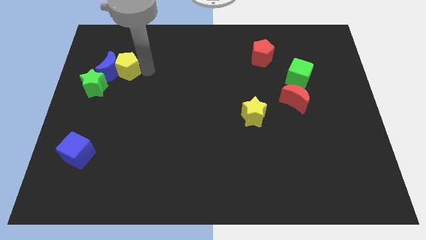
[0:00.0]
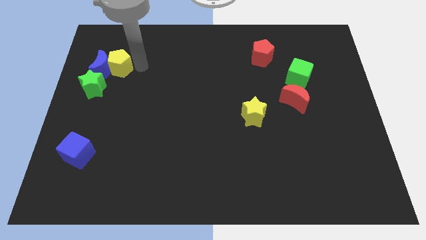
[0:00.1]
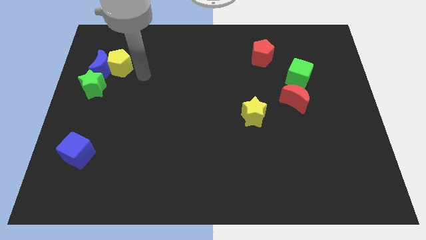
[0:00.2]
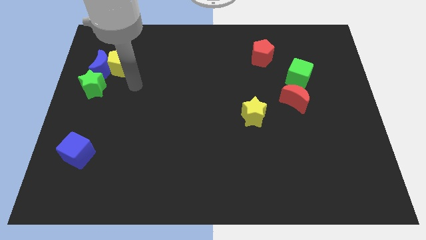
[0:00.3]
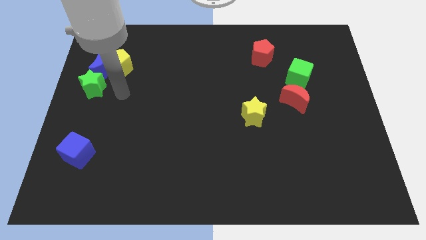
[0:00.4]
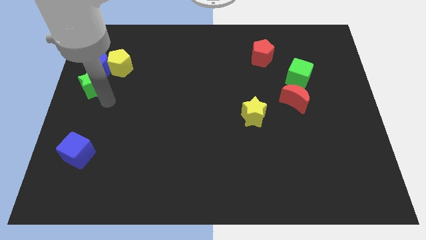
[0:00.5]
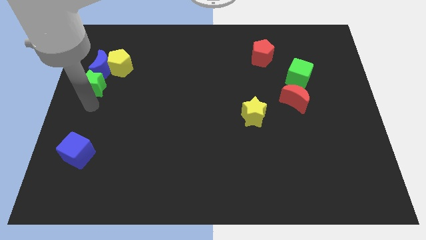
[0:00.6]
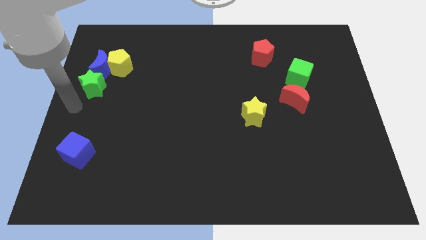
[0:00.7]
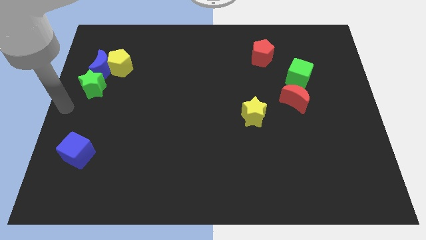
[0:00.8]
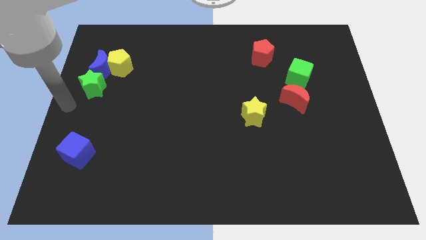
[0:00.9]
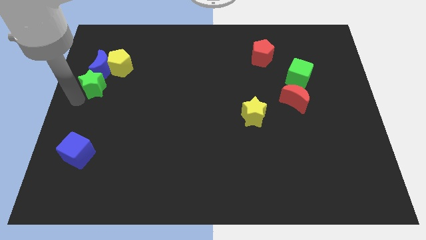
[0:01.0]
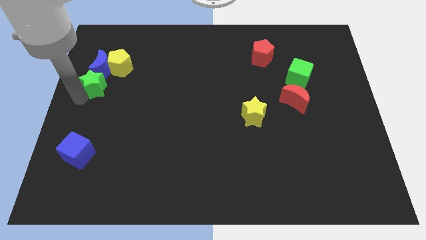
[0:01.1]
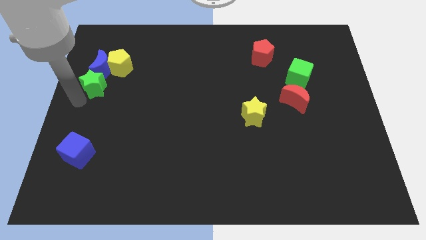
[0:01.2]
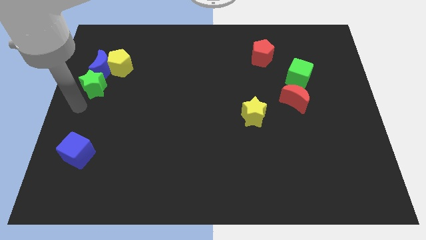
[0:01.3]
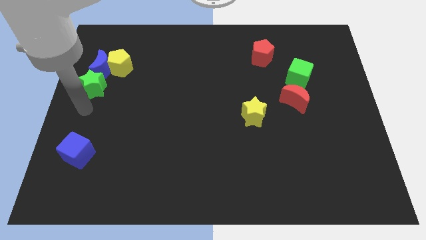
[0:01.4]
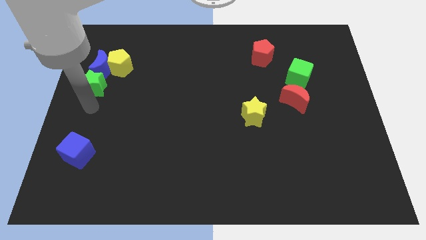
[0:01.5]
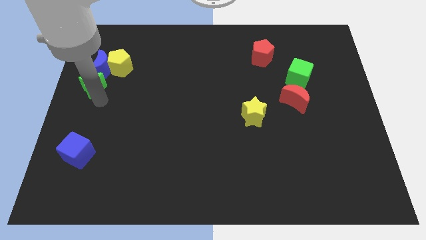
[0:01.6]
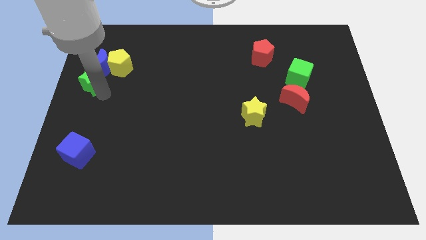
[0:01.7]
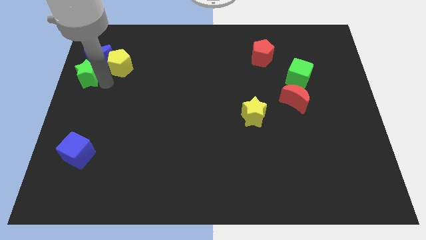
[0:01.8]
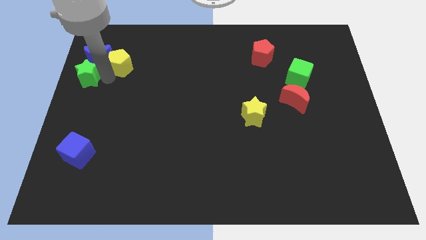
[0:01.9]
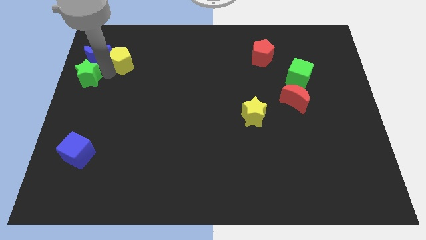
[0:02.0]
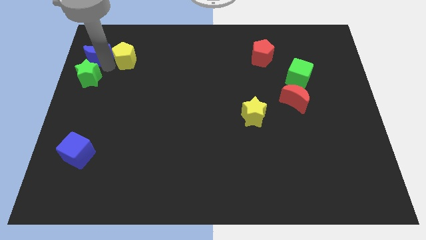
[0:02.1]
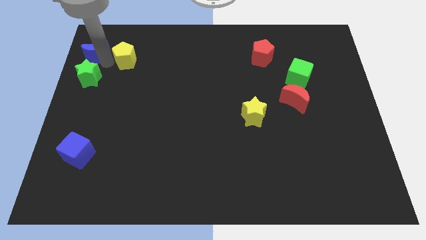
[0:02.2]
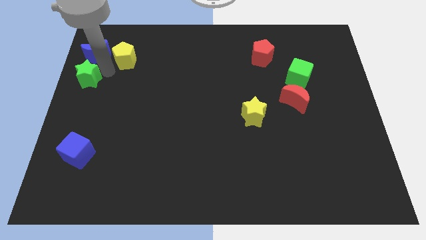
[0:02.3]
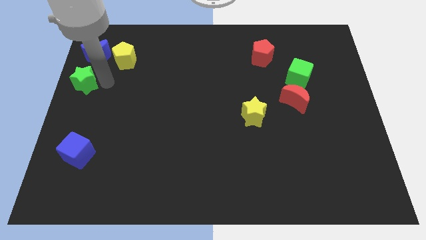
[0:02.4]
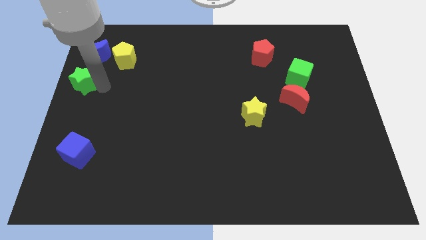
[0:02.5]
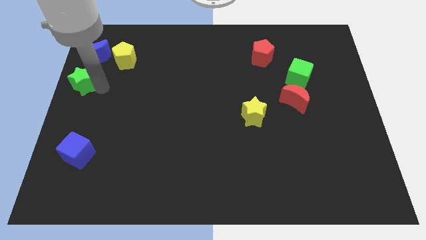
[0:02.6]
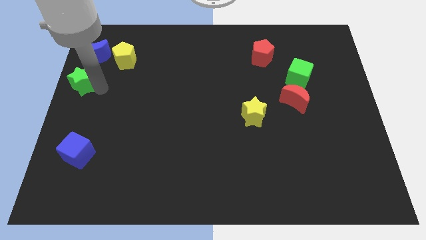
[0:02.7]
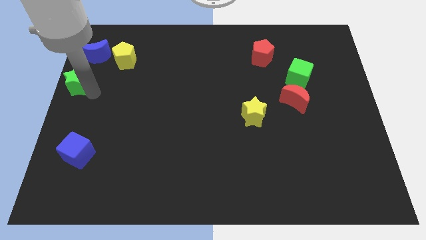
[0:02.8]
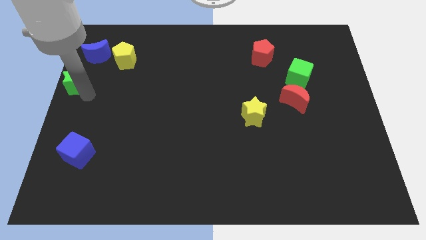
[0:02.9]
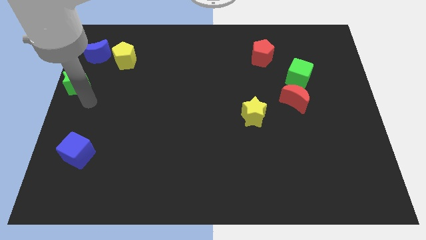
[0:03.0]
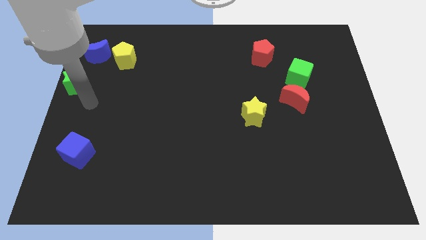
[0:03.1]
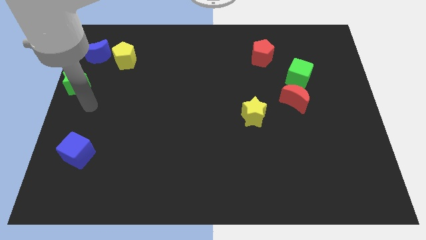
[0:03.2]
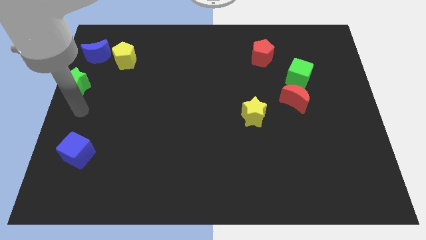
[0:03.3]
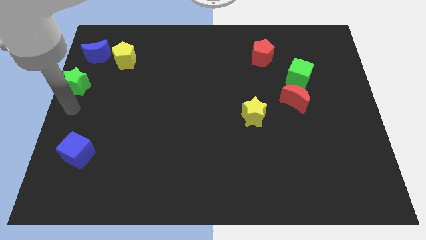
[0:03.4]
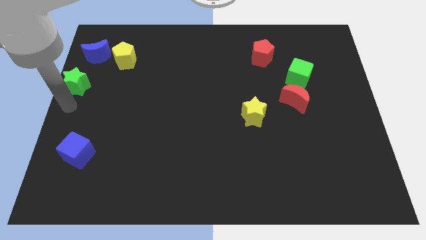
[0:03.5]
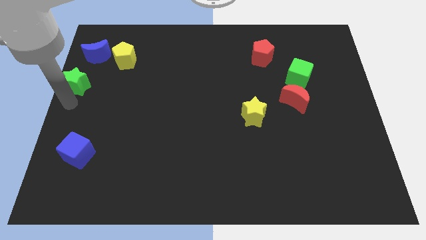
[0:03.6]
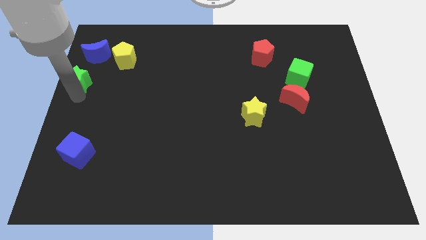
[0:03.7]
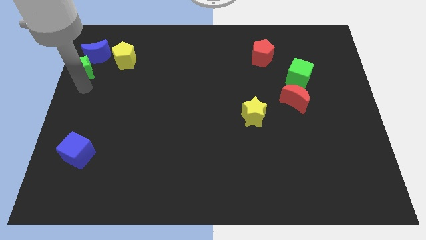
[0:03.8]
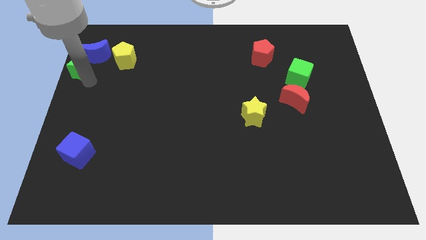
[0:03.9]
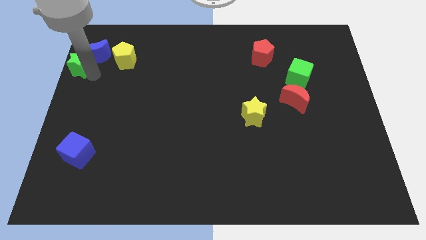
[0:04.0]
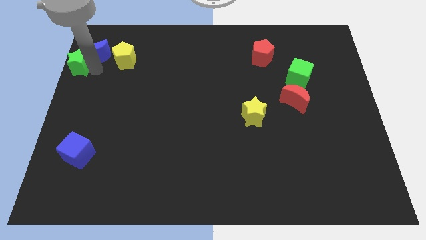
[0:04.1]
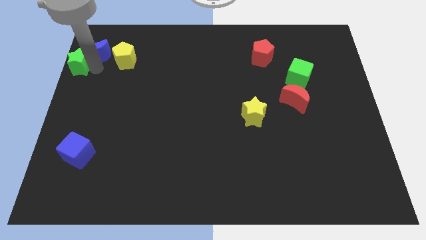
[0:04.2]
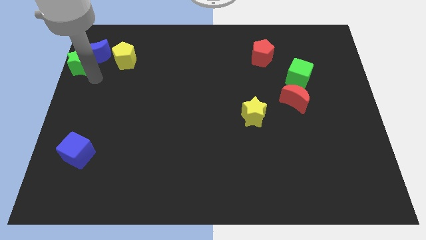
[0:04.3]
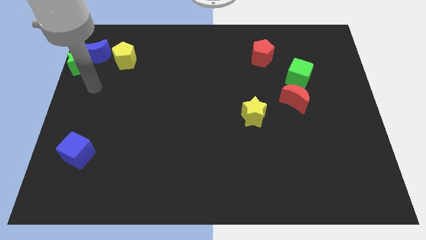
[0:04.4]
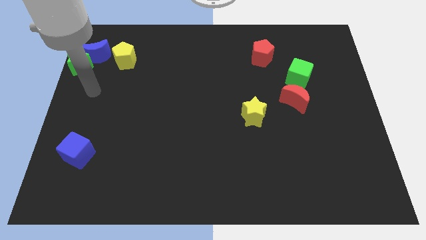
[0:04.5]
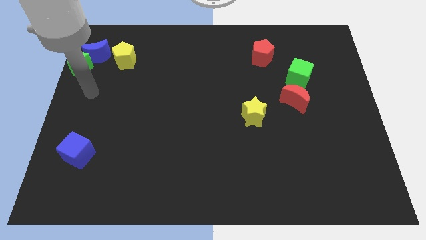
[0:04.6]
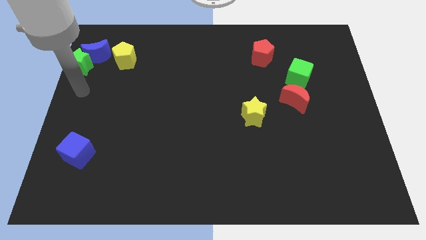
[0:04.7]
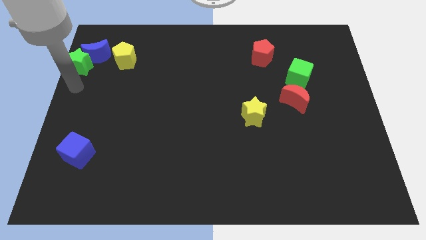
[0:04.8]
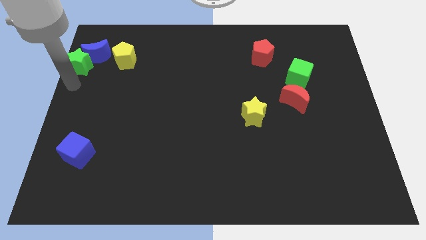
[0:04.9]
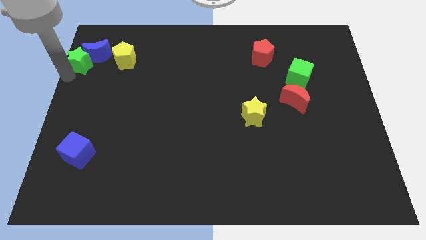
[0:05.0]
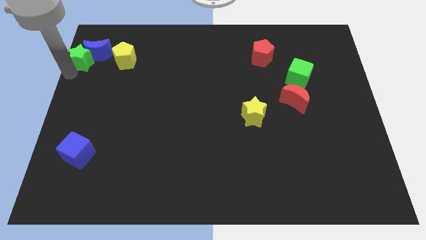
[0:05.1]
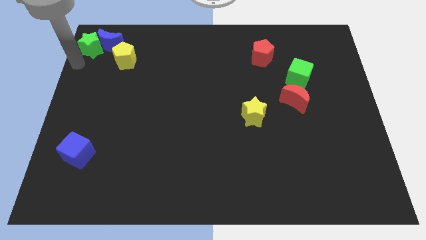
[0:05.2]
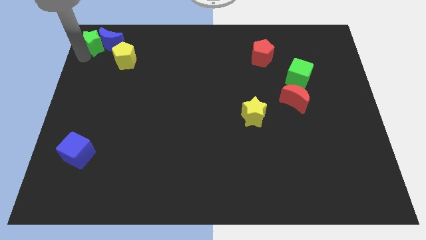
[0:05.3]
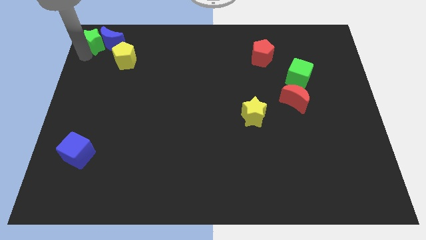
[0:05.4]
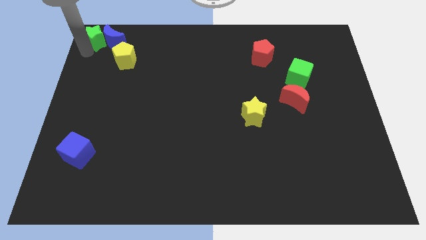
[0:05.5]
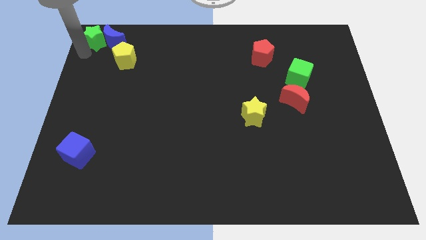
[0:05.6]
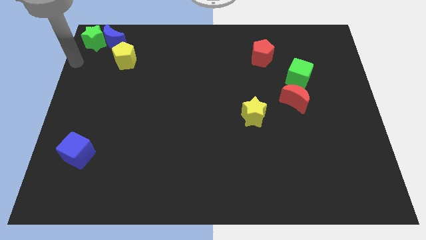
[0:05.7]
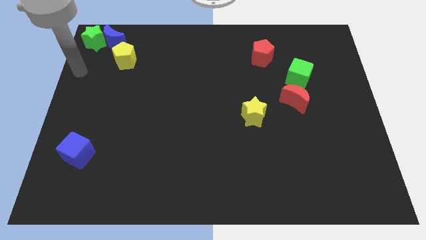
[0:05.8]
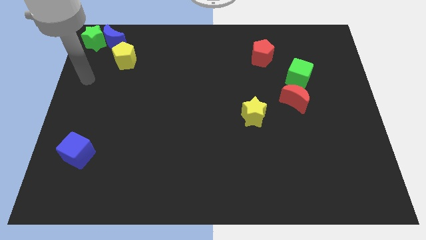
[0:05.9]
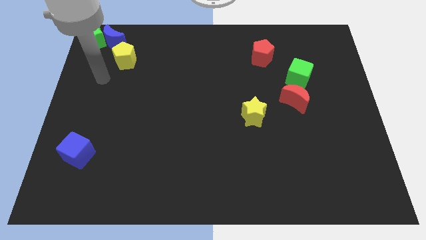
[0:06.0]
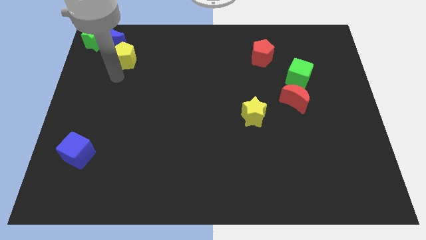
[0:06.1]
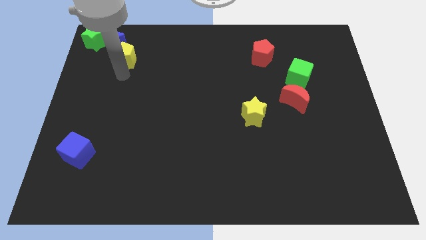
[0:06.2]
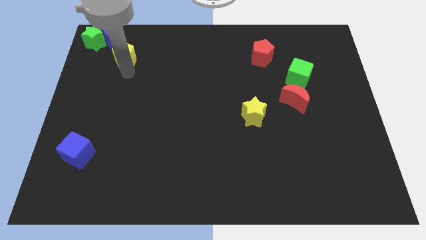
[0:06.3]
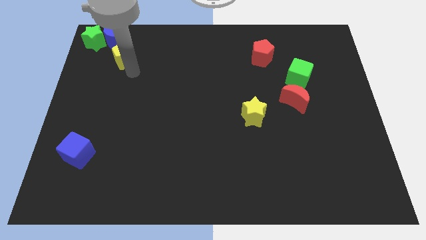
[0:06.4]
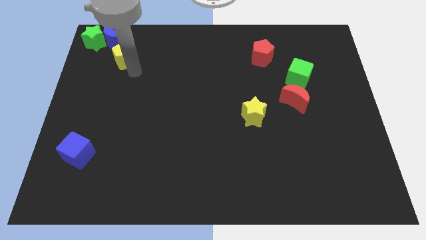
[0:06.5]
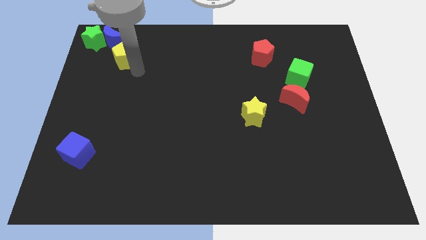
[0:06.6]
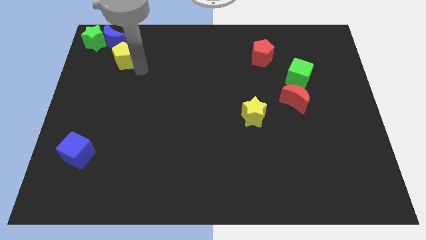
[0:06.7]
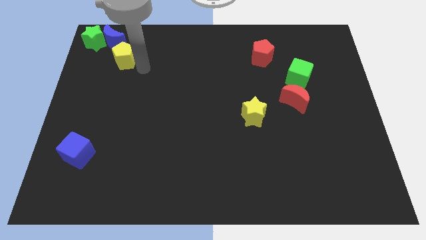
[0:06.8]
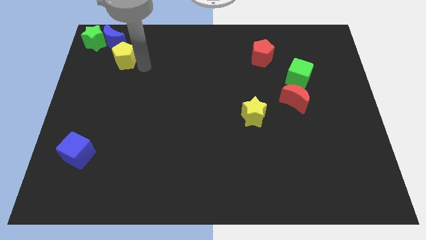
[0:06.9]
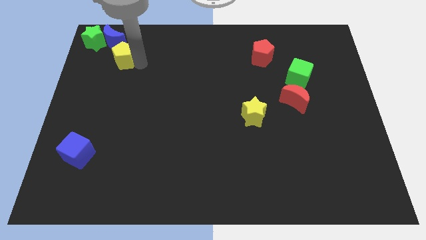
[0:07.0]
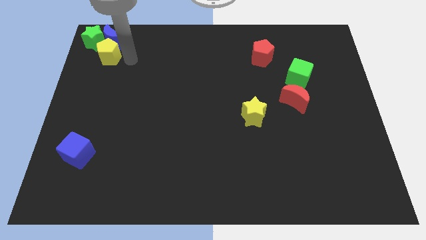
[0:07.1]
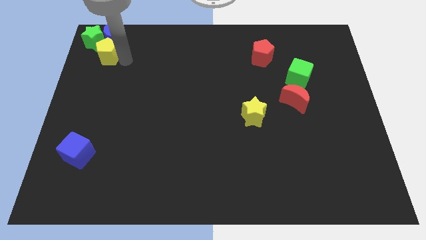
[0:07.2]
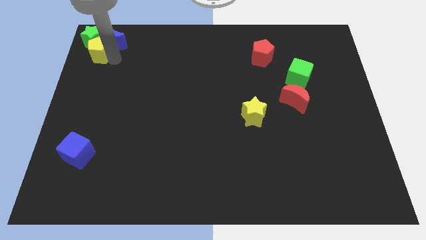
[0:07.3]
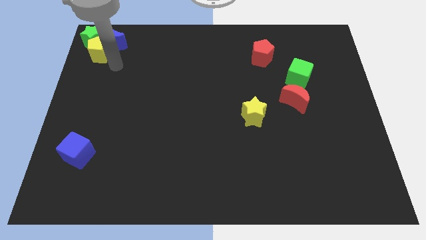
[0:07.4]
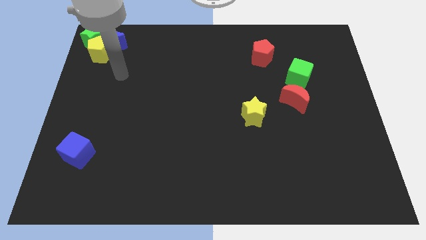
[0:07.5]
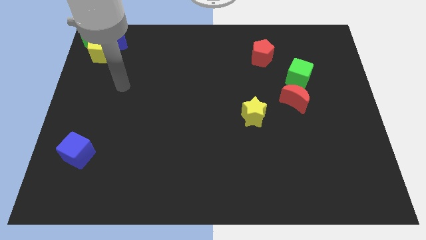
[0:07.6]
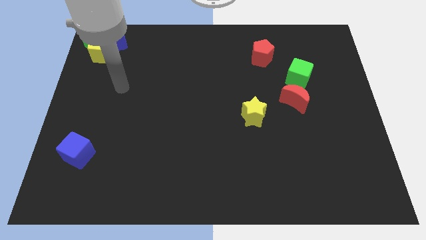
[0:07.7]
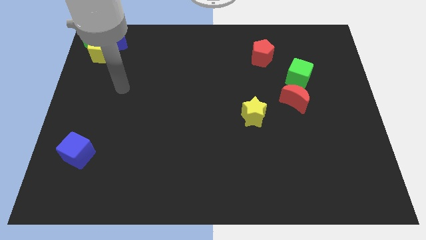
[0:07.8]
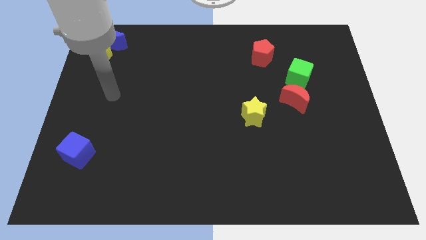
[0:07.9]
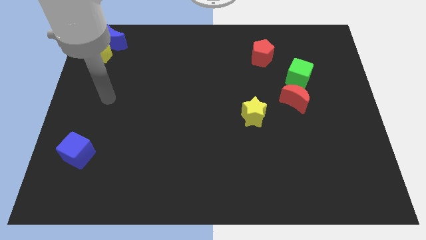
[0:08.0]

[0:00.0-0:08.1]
move the group of three blocks towards top left

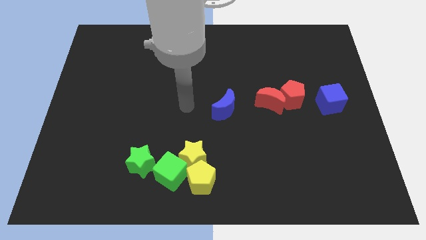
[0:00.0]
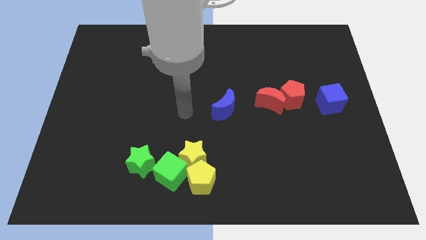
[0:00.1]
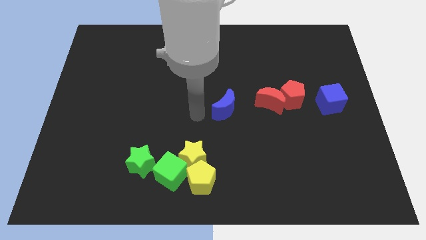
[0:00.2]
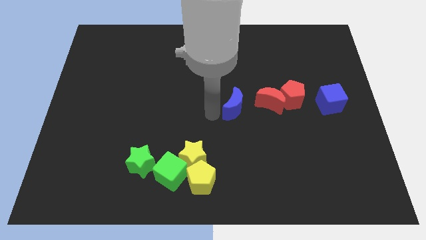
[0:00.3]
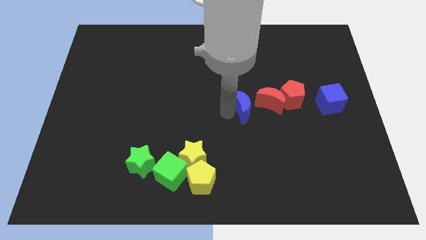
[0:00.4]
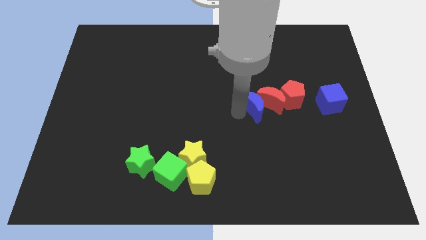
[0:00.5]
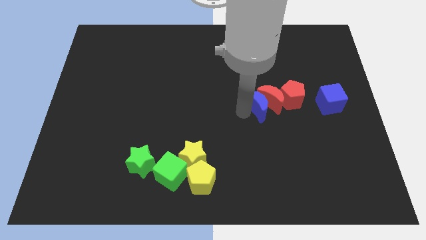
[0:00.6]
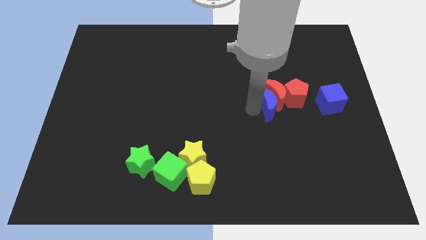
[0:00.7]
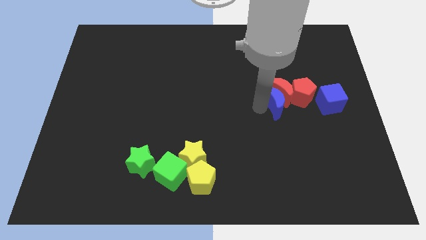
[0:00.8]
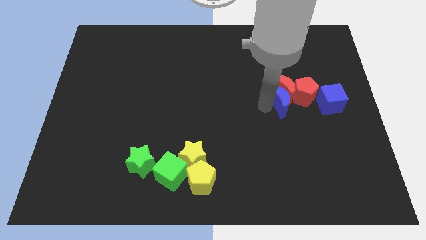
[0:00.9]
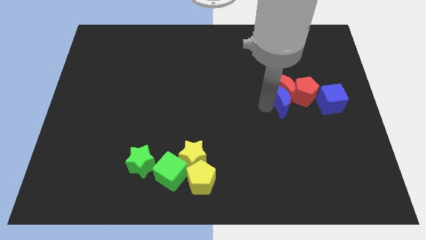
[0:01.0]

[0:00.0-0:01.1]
move blue crescent into the red crescent
